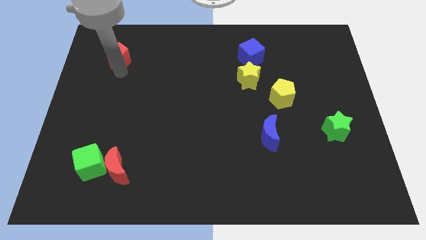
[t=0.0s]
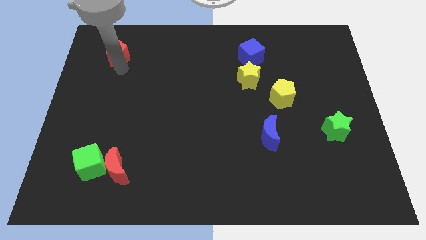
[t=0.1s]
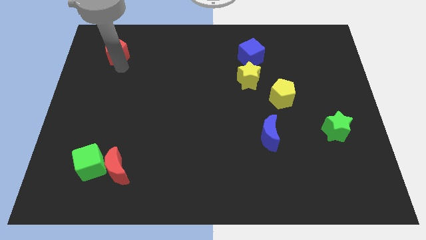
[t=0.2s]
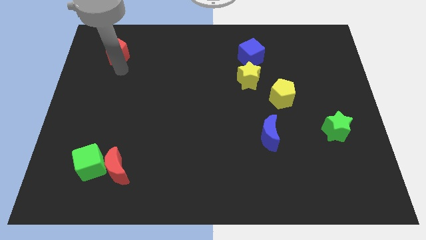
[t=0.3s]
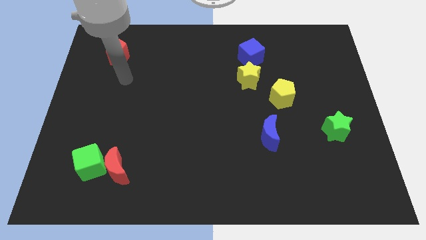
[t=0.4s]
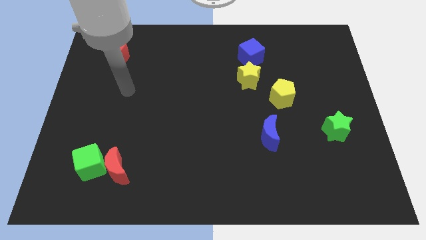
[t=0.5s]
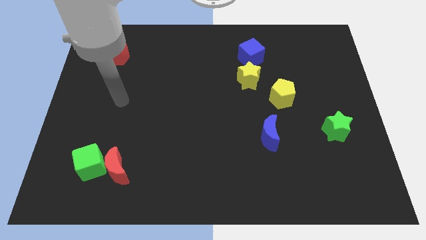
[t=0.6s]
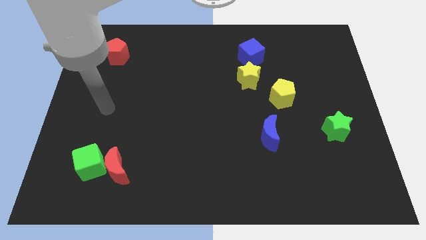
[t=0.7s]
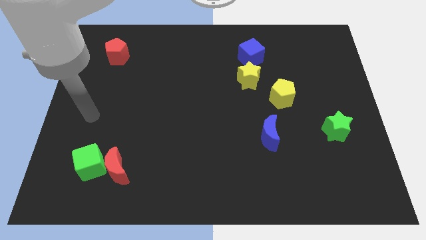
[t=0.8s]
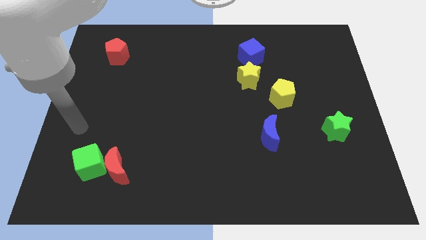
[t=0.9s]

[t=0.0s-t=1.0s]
move your arm away from the red pentagon

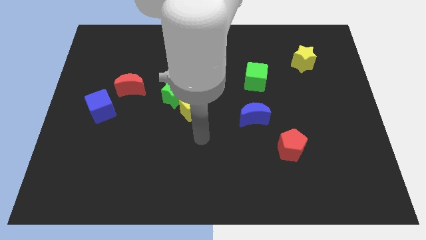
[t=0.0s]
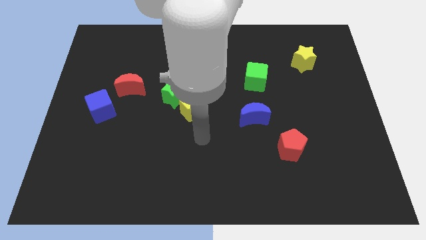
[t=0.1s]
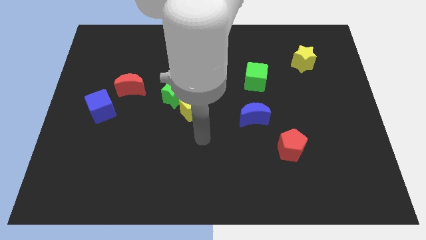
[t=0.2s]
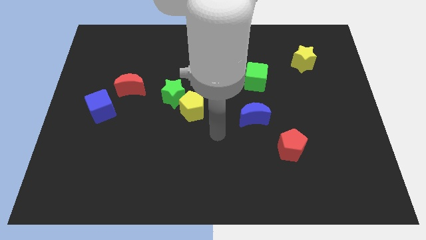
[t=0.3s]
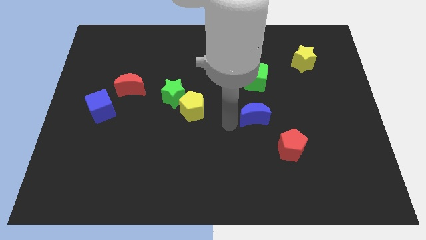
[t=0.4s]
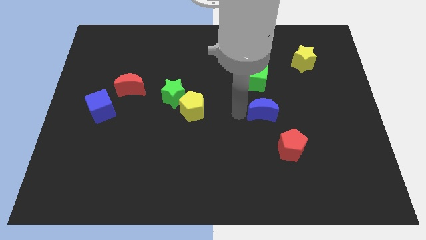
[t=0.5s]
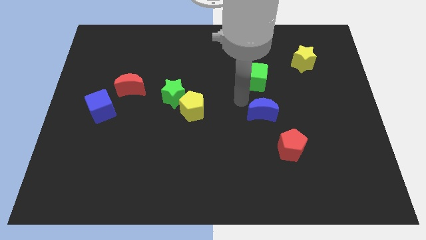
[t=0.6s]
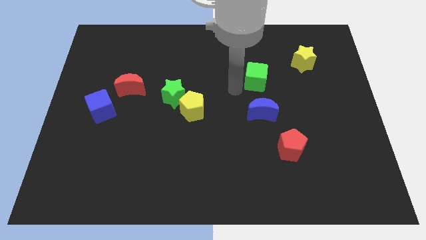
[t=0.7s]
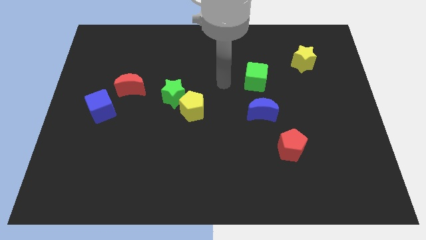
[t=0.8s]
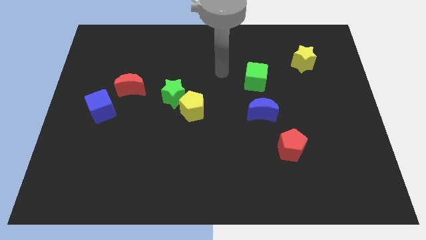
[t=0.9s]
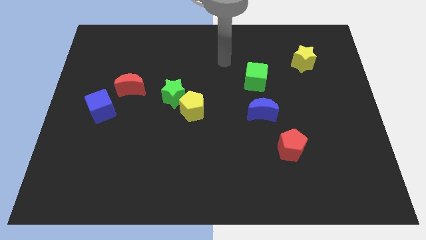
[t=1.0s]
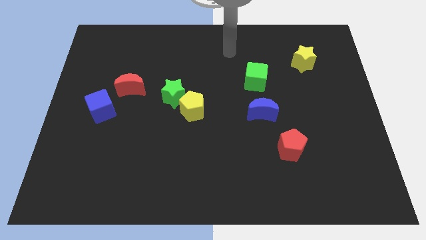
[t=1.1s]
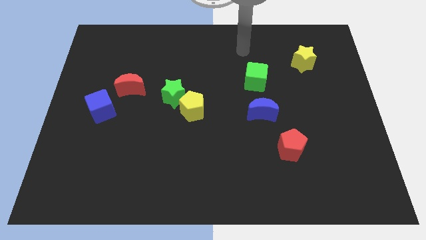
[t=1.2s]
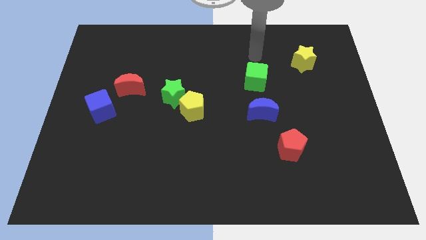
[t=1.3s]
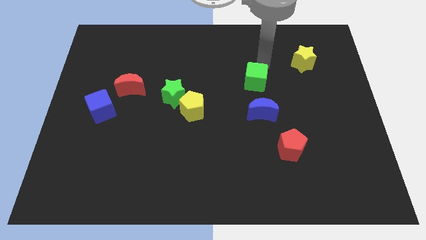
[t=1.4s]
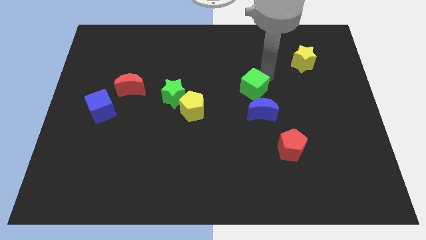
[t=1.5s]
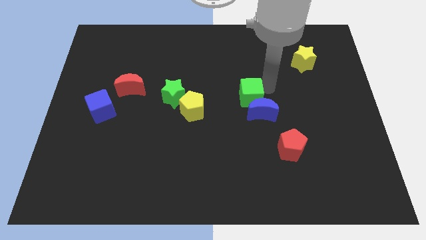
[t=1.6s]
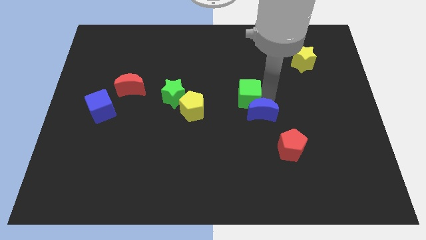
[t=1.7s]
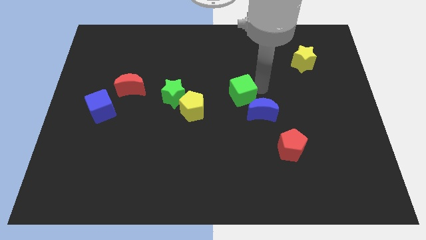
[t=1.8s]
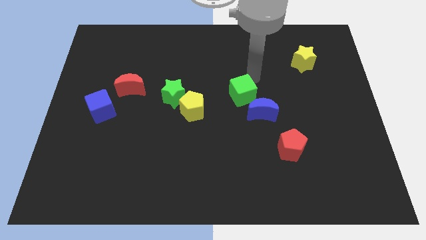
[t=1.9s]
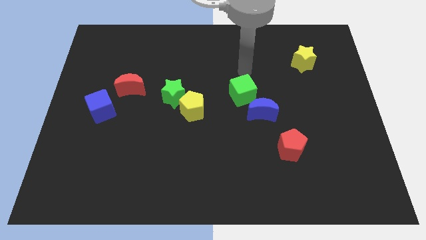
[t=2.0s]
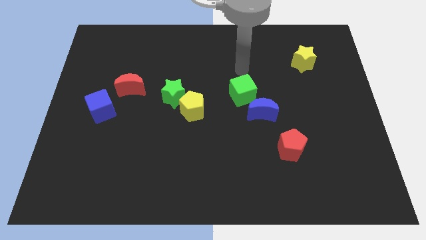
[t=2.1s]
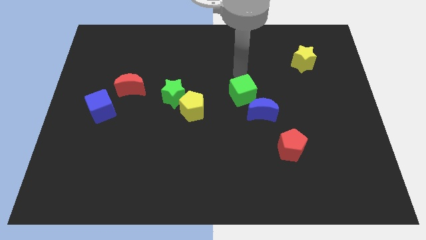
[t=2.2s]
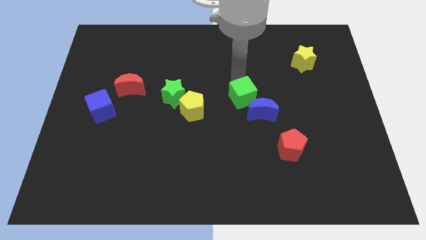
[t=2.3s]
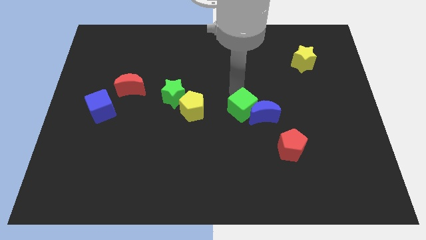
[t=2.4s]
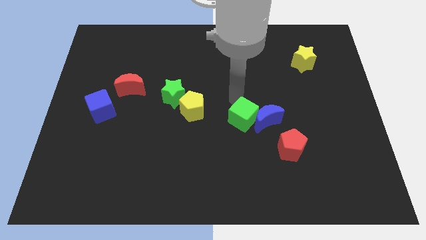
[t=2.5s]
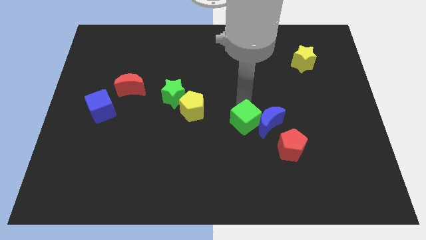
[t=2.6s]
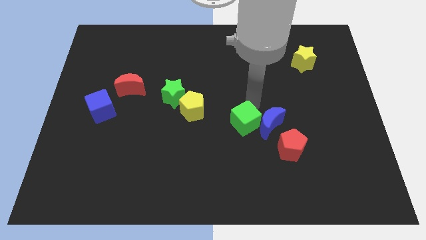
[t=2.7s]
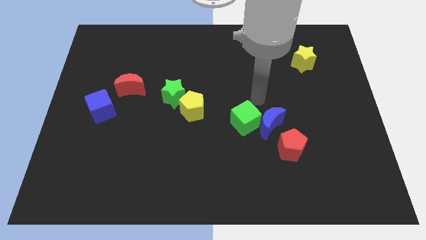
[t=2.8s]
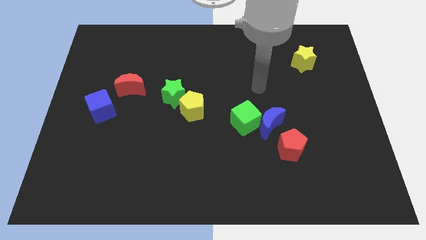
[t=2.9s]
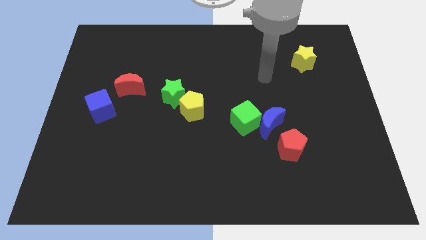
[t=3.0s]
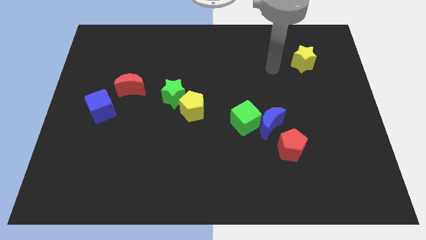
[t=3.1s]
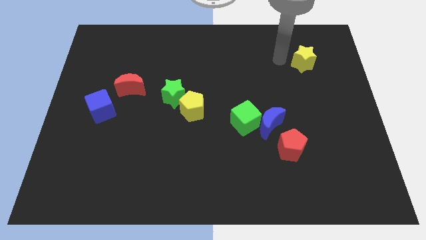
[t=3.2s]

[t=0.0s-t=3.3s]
push the green cube into blue crescent

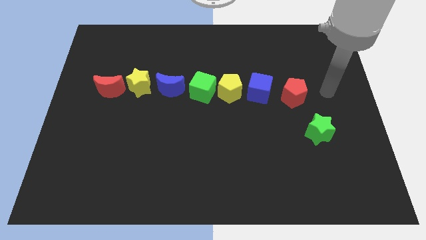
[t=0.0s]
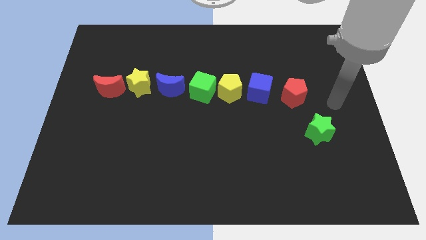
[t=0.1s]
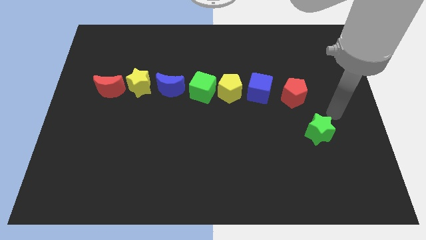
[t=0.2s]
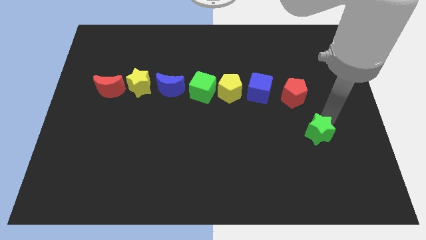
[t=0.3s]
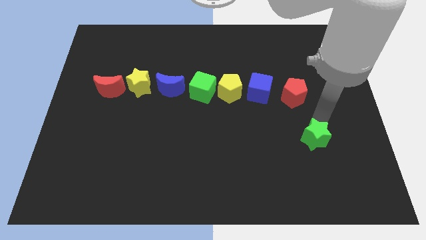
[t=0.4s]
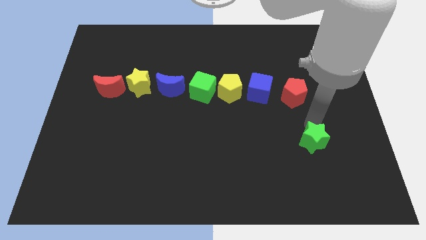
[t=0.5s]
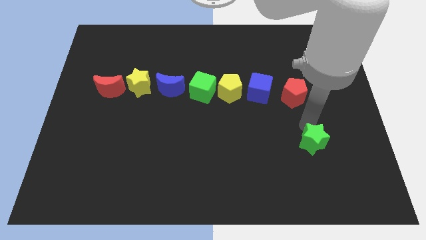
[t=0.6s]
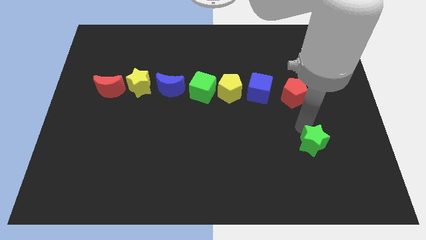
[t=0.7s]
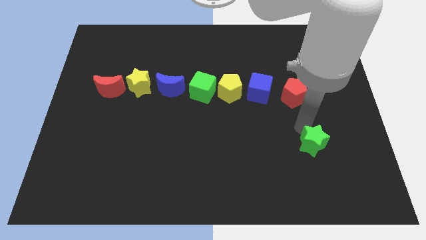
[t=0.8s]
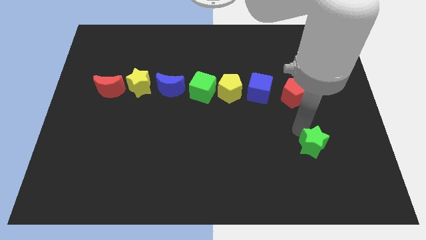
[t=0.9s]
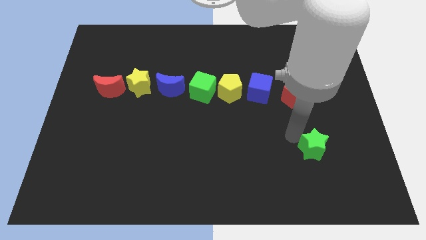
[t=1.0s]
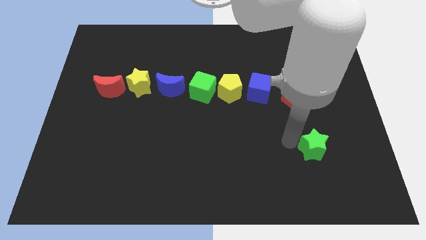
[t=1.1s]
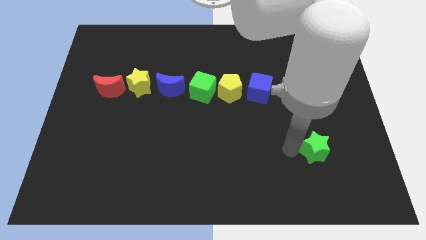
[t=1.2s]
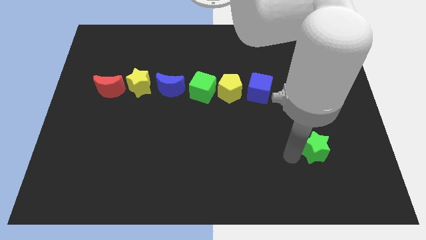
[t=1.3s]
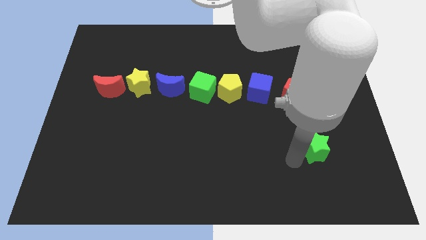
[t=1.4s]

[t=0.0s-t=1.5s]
move the green star down slightly

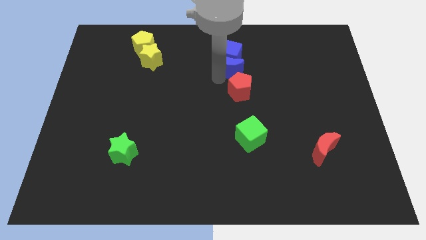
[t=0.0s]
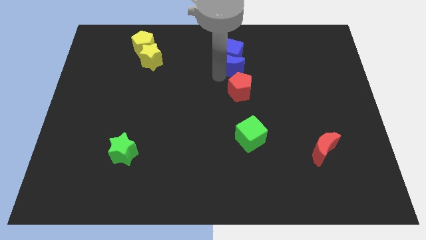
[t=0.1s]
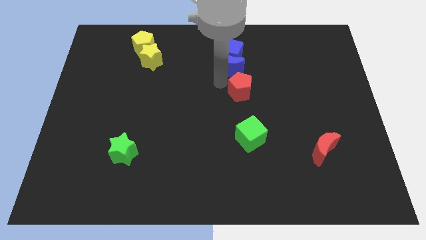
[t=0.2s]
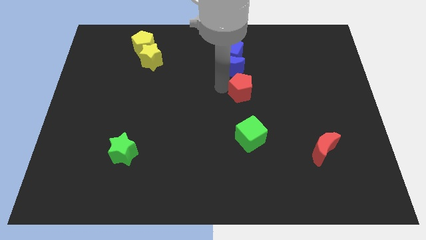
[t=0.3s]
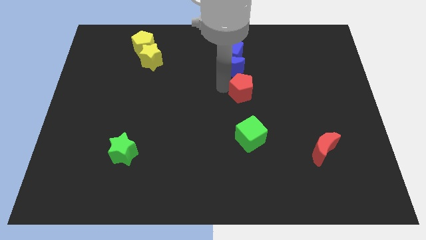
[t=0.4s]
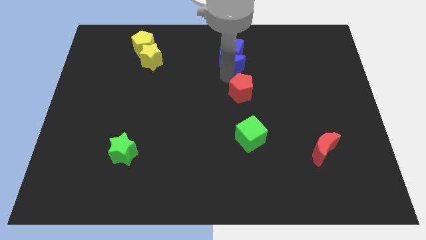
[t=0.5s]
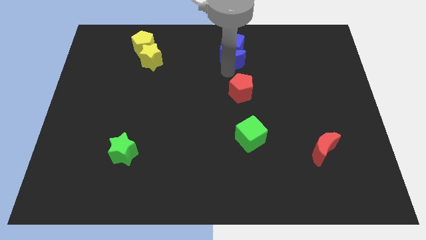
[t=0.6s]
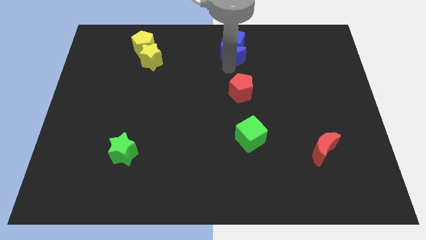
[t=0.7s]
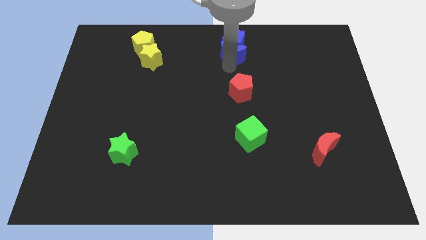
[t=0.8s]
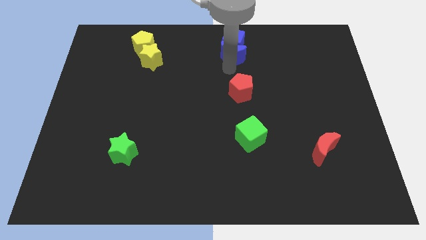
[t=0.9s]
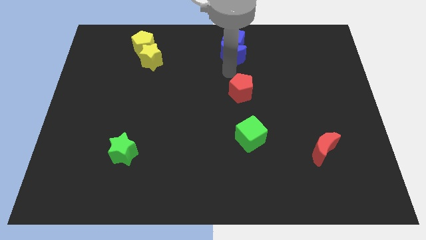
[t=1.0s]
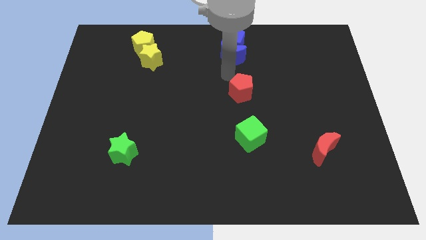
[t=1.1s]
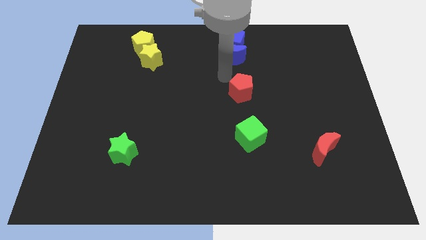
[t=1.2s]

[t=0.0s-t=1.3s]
slightly move blue blocks upwards

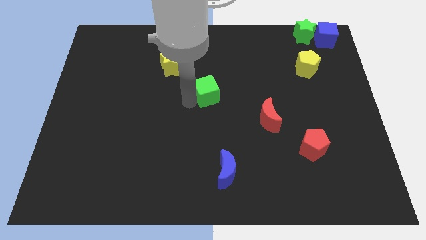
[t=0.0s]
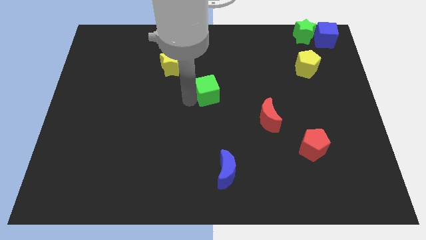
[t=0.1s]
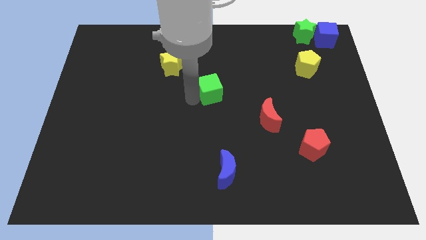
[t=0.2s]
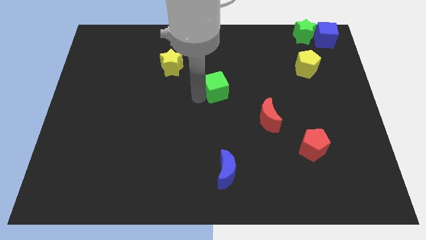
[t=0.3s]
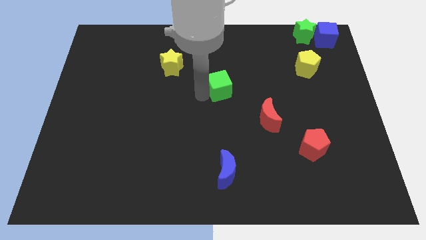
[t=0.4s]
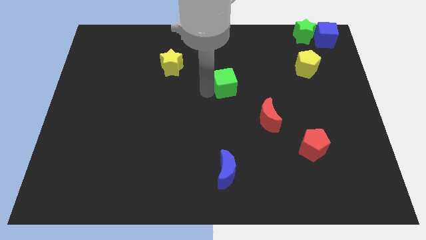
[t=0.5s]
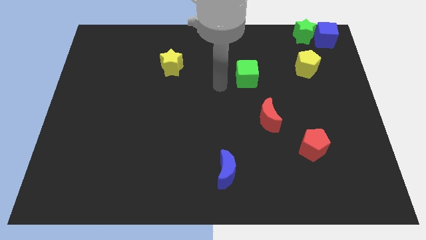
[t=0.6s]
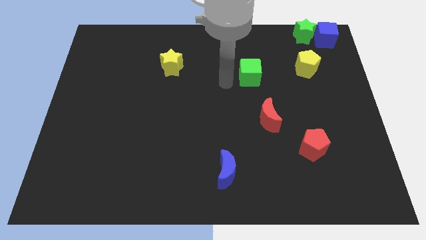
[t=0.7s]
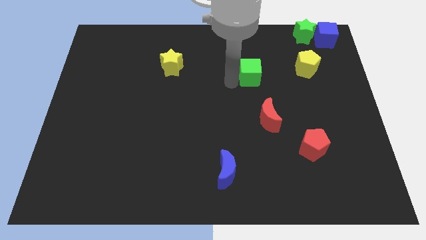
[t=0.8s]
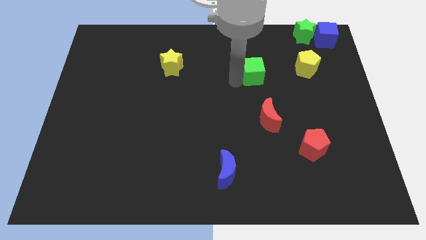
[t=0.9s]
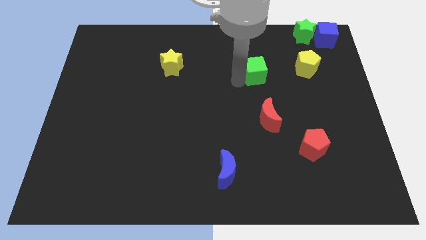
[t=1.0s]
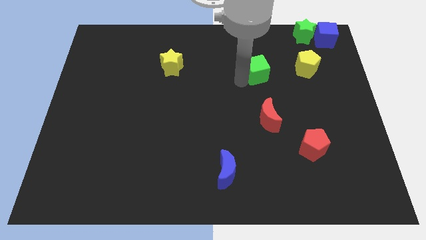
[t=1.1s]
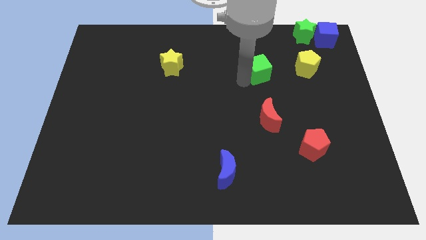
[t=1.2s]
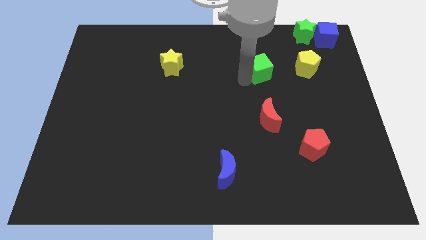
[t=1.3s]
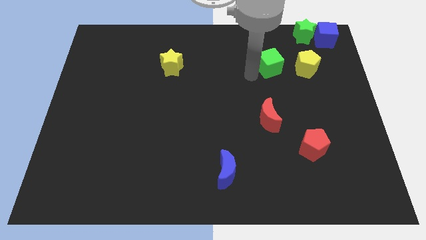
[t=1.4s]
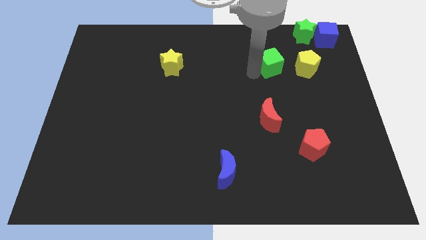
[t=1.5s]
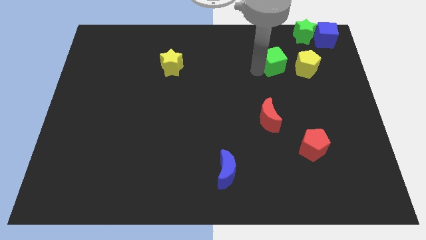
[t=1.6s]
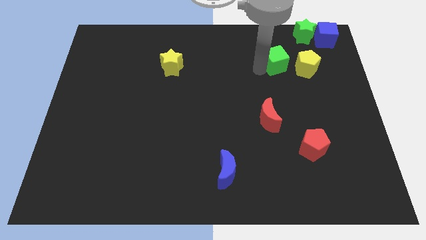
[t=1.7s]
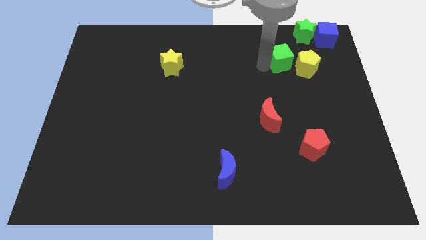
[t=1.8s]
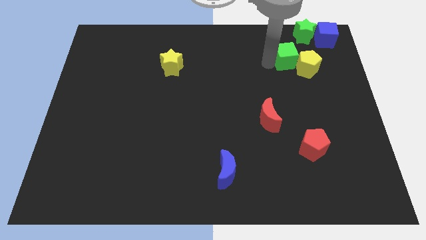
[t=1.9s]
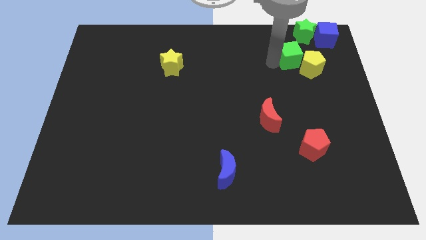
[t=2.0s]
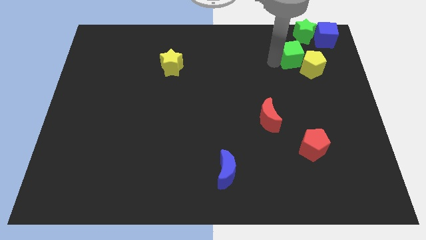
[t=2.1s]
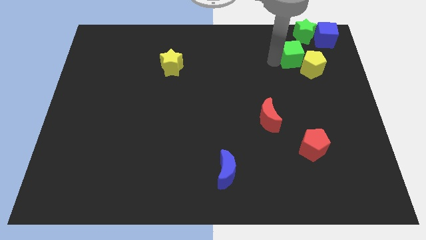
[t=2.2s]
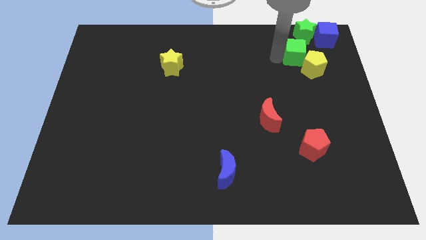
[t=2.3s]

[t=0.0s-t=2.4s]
push the green cube into the yellow pentagon
